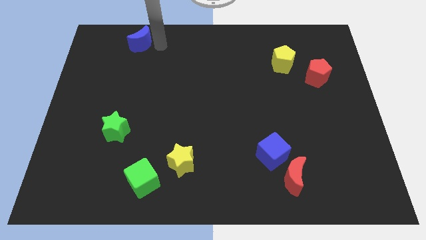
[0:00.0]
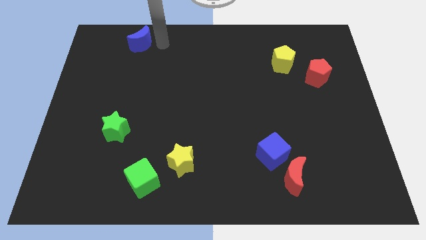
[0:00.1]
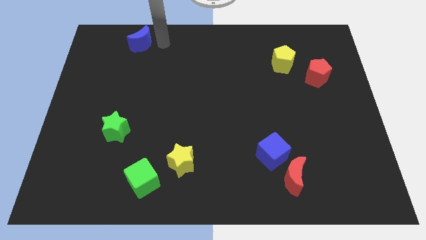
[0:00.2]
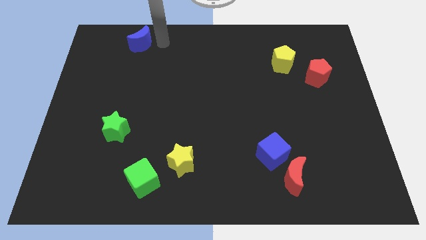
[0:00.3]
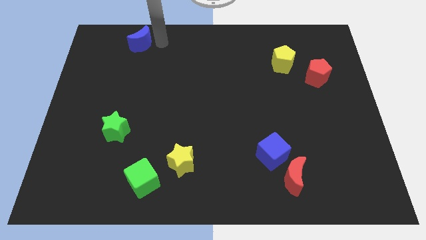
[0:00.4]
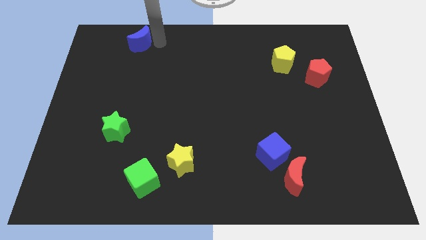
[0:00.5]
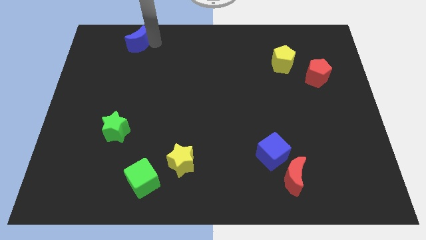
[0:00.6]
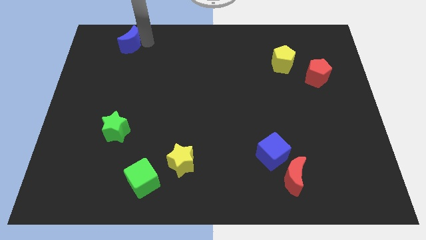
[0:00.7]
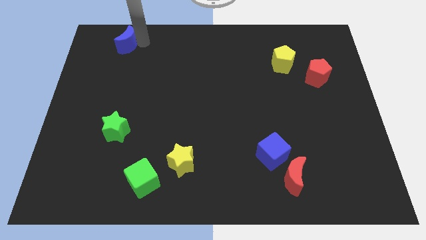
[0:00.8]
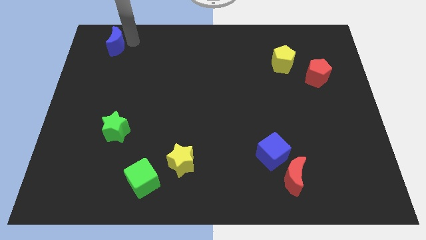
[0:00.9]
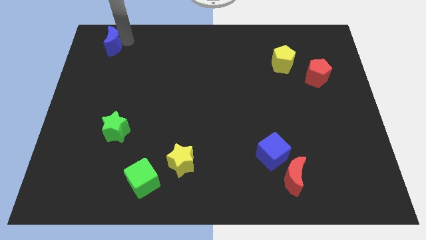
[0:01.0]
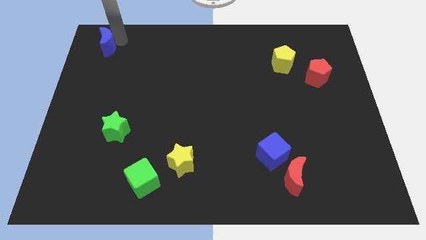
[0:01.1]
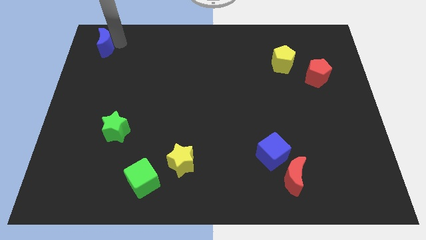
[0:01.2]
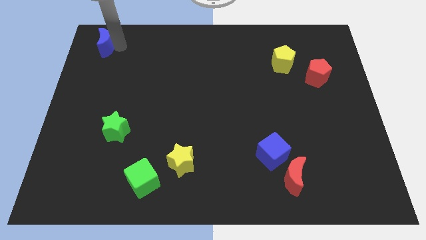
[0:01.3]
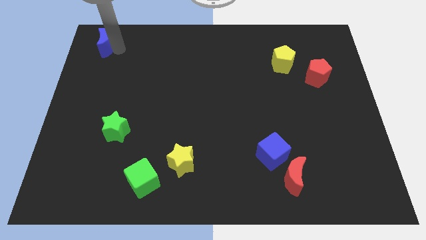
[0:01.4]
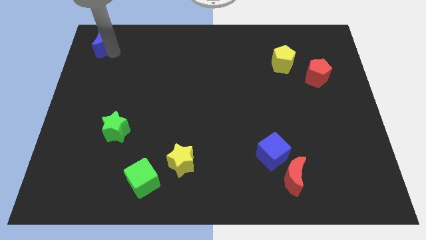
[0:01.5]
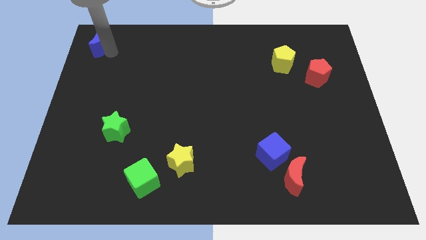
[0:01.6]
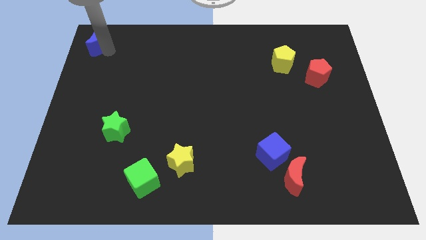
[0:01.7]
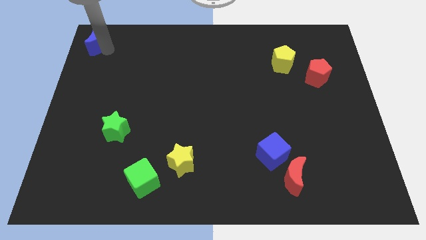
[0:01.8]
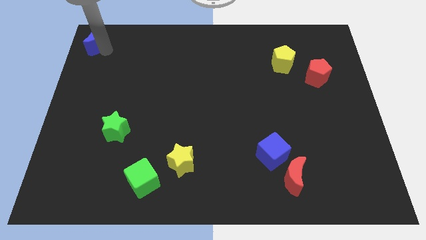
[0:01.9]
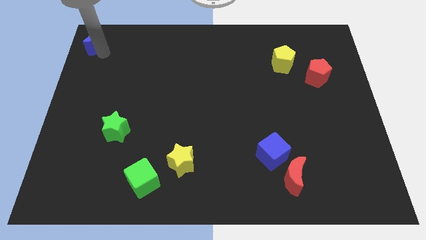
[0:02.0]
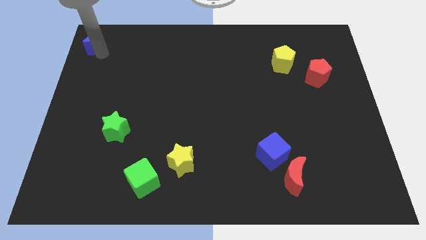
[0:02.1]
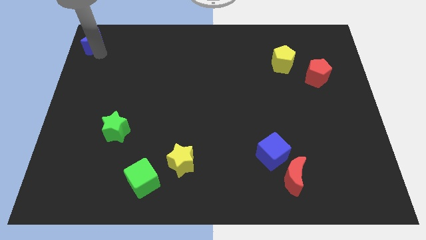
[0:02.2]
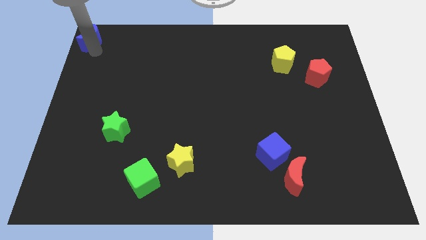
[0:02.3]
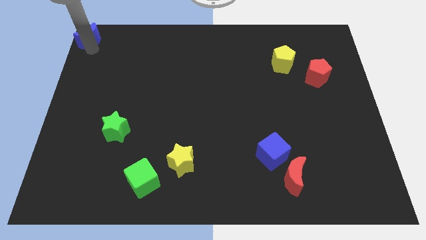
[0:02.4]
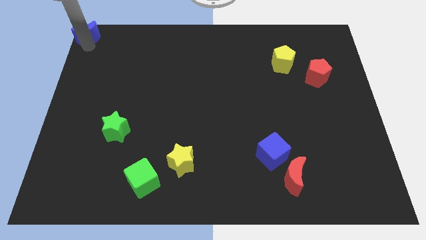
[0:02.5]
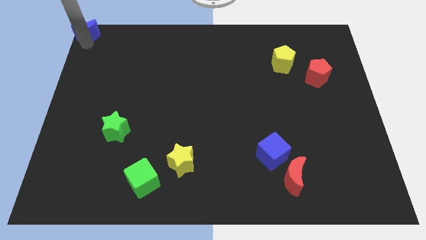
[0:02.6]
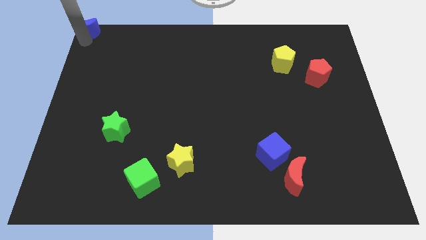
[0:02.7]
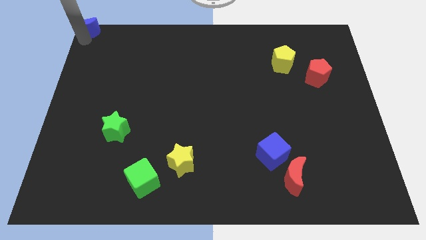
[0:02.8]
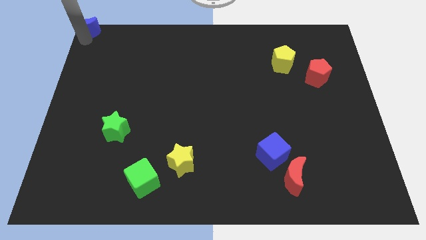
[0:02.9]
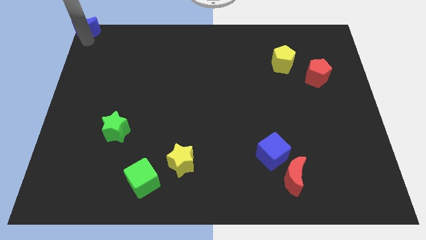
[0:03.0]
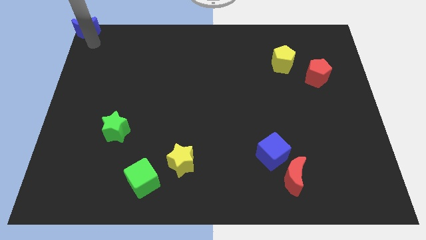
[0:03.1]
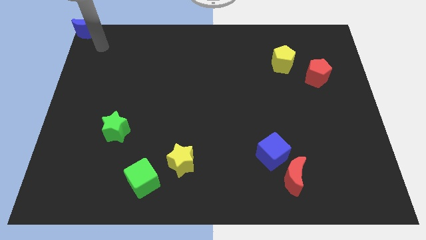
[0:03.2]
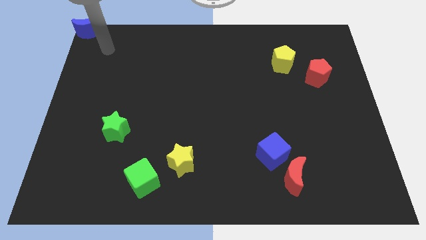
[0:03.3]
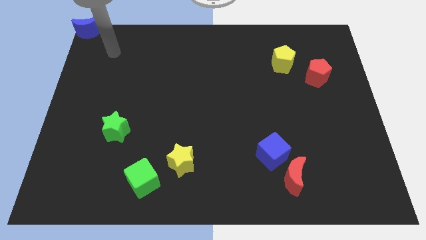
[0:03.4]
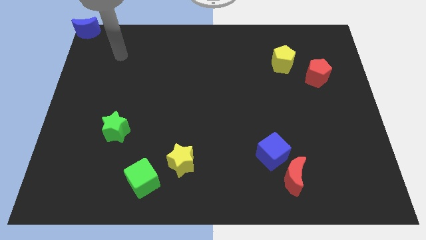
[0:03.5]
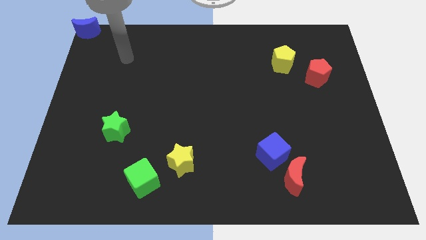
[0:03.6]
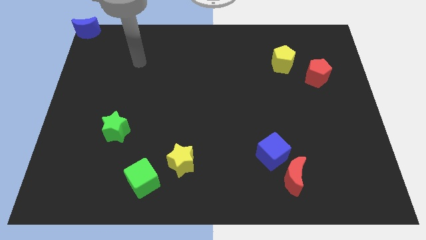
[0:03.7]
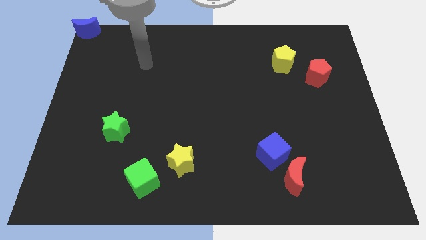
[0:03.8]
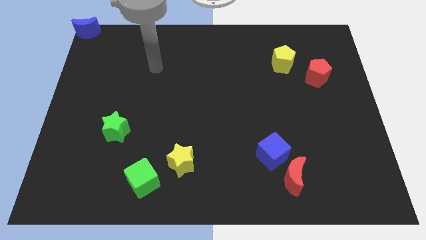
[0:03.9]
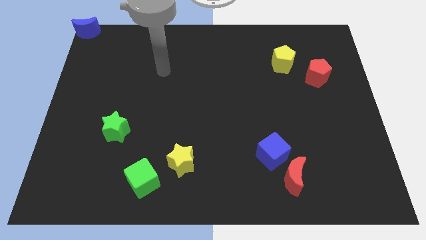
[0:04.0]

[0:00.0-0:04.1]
move blue crescent to the top left corner

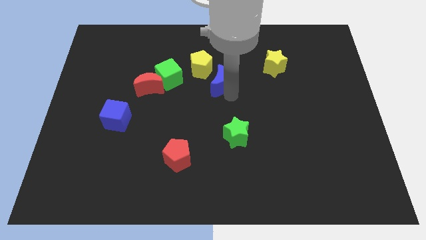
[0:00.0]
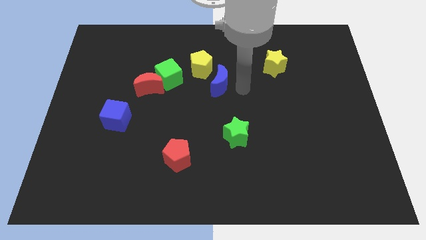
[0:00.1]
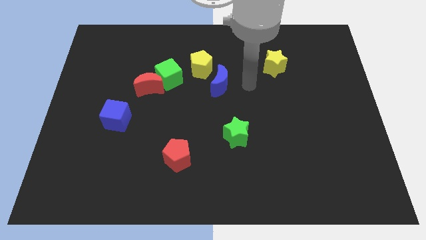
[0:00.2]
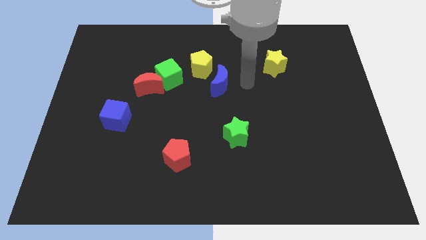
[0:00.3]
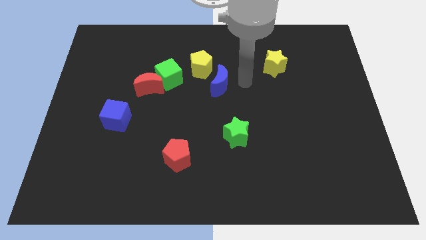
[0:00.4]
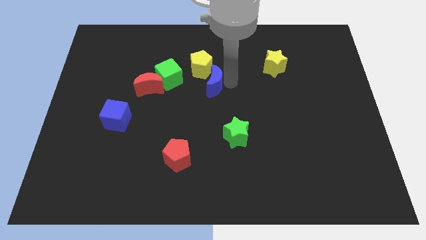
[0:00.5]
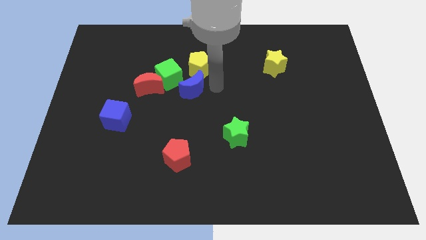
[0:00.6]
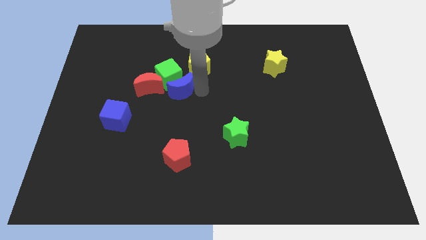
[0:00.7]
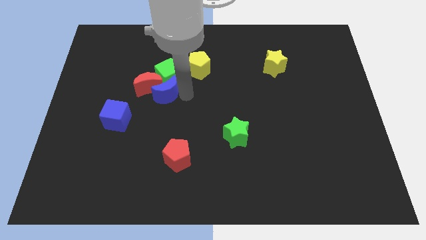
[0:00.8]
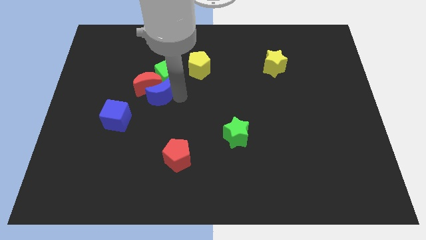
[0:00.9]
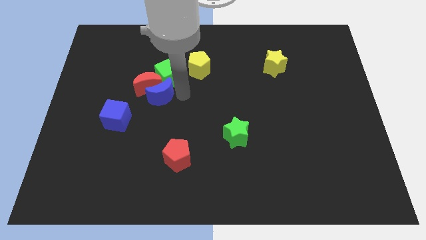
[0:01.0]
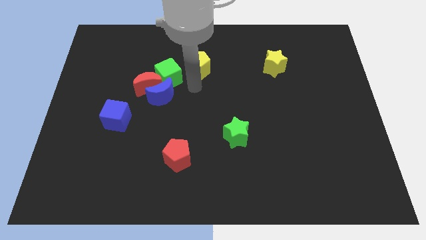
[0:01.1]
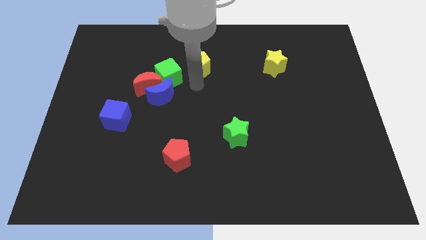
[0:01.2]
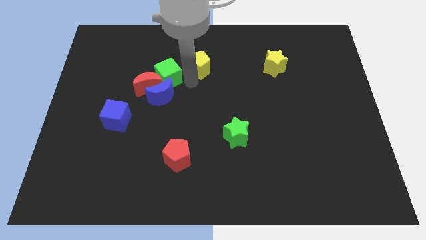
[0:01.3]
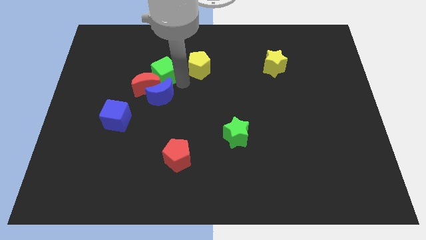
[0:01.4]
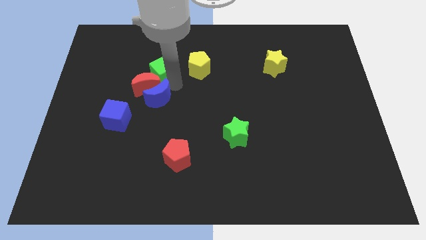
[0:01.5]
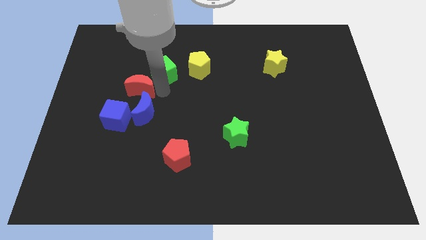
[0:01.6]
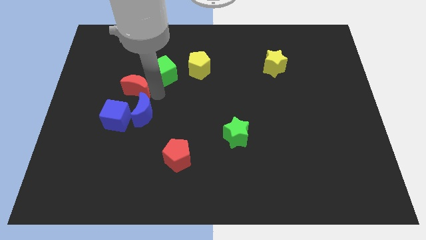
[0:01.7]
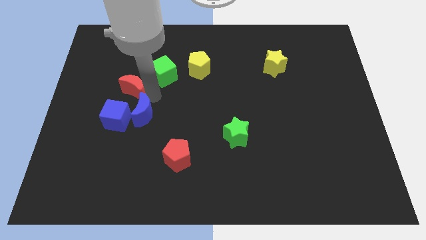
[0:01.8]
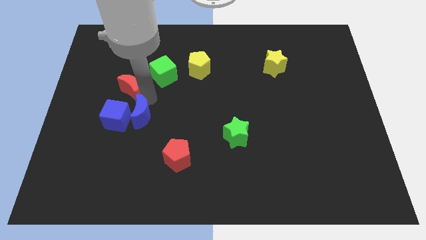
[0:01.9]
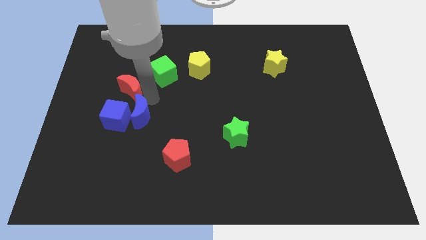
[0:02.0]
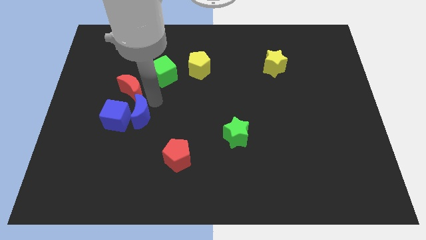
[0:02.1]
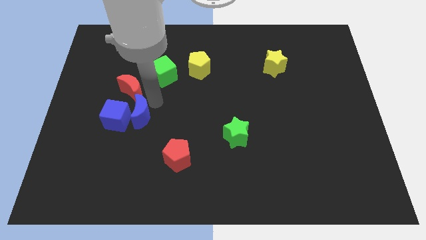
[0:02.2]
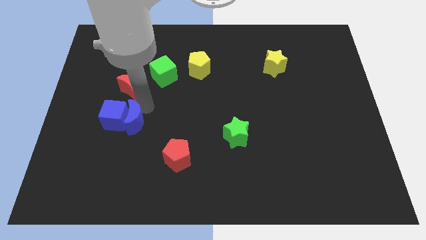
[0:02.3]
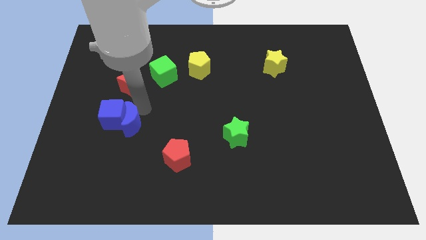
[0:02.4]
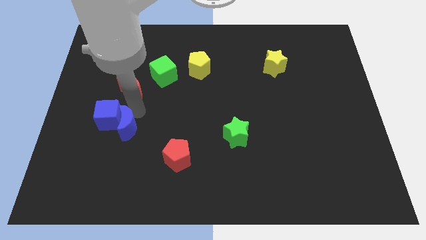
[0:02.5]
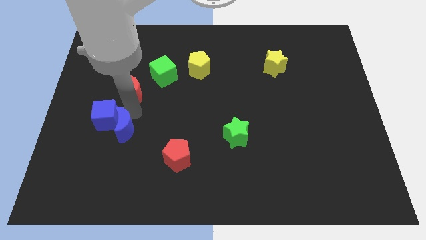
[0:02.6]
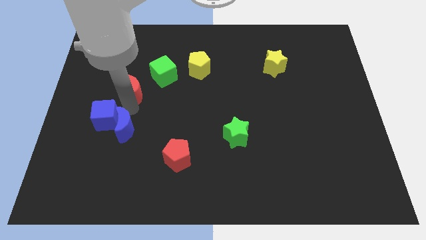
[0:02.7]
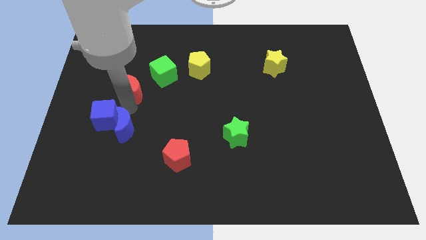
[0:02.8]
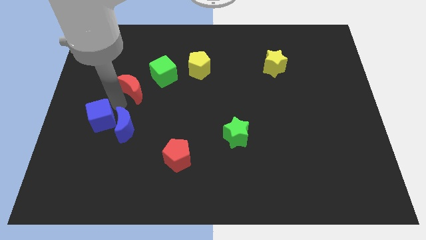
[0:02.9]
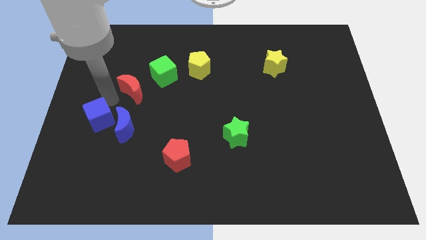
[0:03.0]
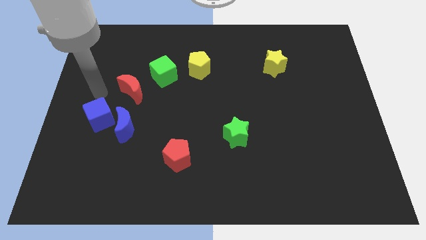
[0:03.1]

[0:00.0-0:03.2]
move the blue moon into blue cube to the right

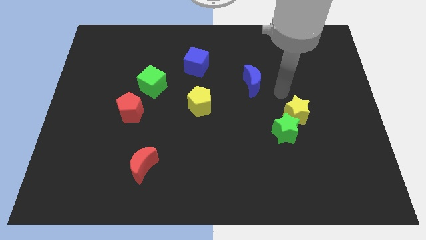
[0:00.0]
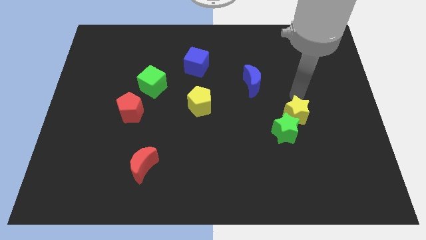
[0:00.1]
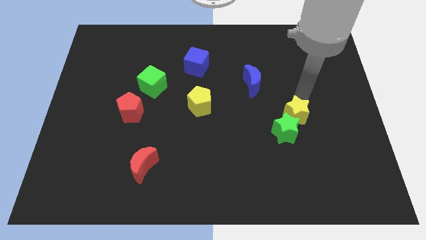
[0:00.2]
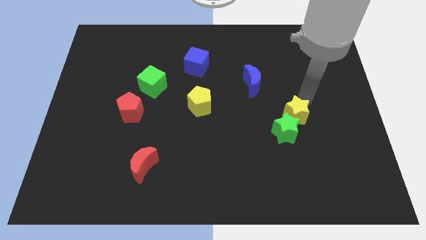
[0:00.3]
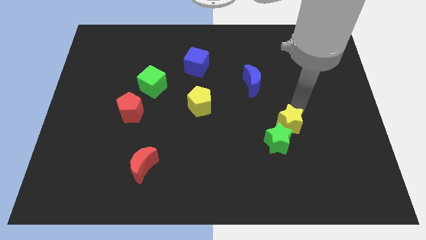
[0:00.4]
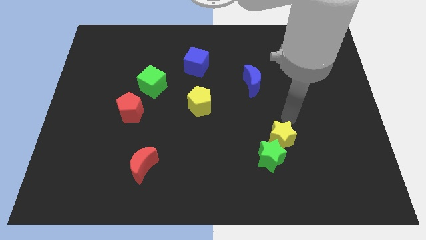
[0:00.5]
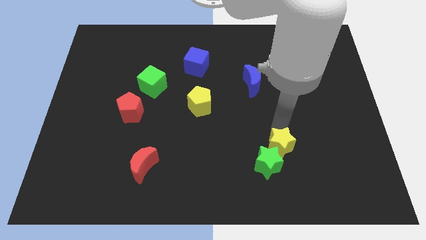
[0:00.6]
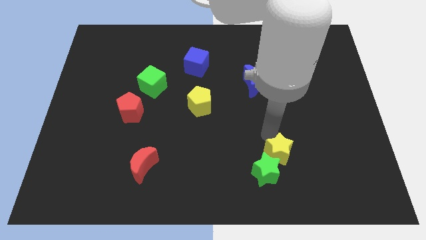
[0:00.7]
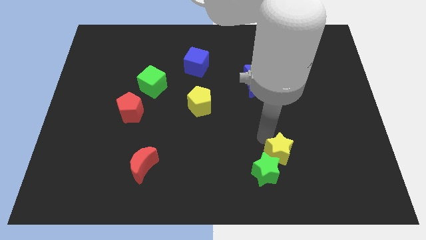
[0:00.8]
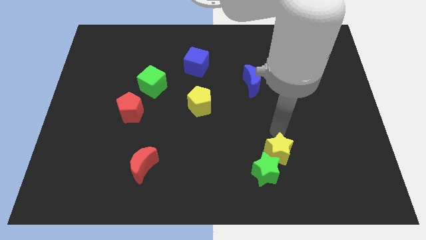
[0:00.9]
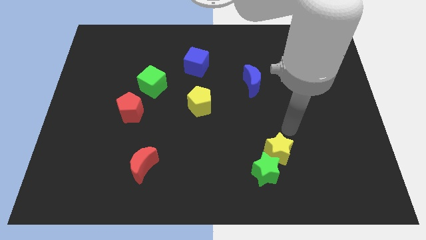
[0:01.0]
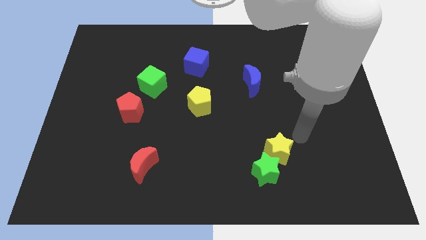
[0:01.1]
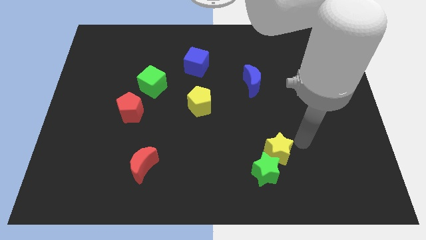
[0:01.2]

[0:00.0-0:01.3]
push the green star down towards the bottom center with yellow star

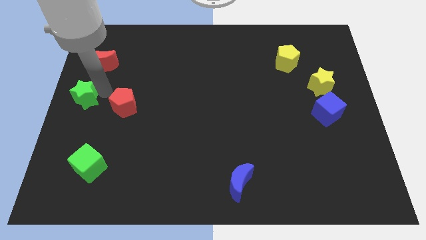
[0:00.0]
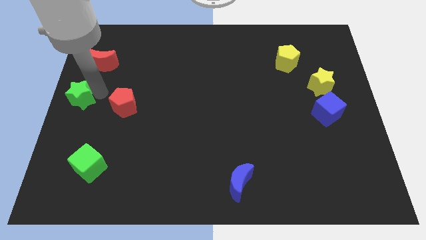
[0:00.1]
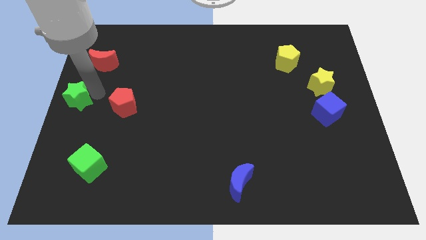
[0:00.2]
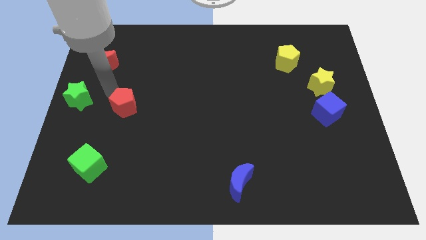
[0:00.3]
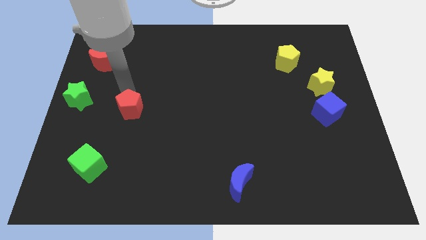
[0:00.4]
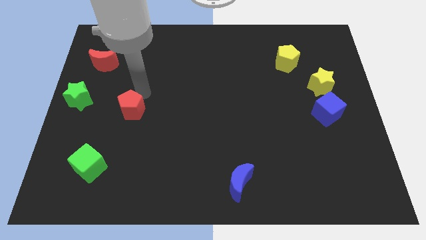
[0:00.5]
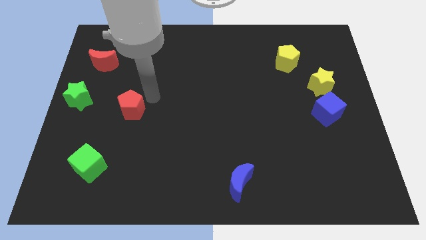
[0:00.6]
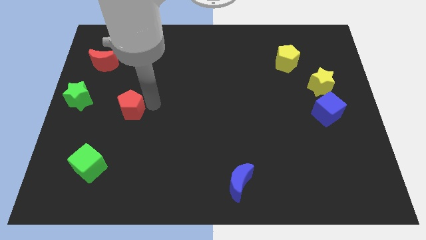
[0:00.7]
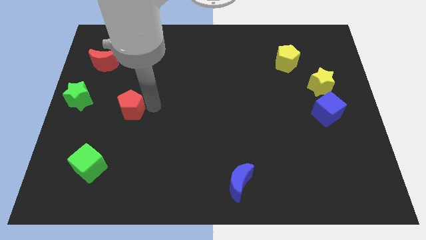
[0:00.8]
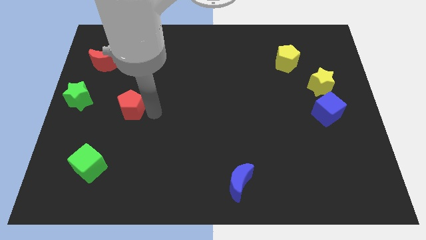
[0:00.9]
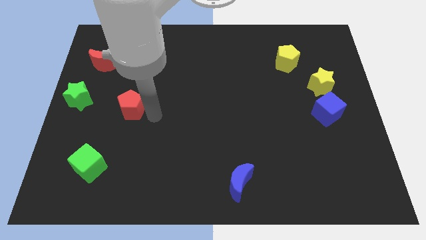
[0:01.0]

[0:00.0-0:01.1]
separate the green star and the red pentagon
